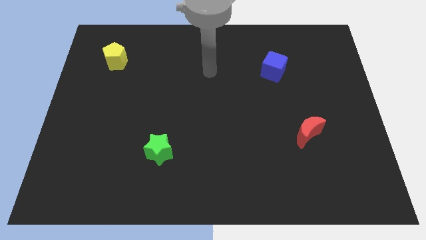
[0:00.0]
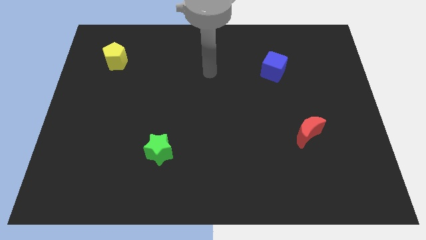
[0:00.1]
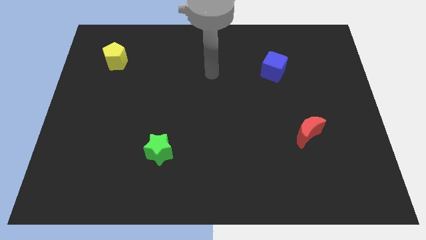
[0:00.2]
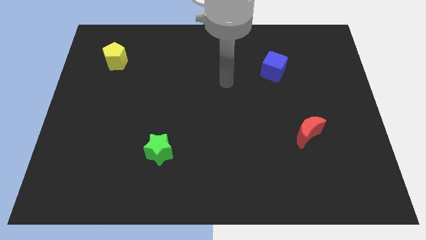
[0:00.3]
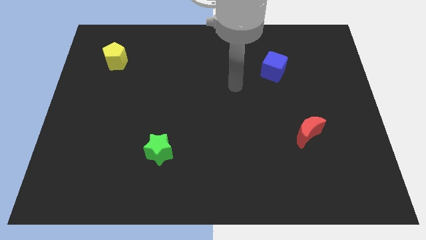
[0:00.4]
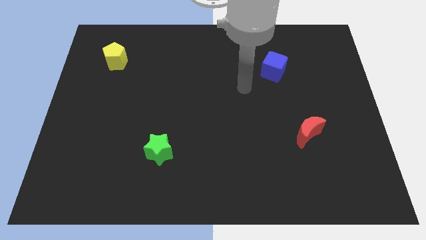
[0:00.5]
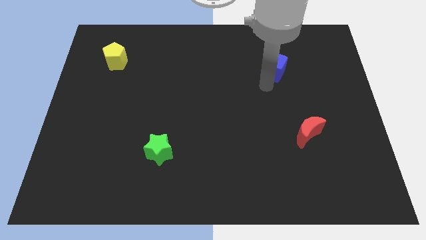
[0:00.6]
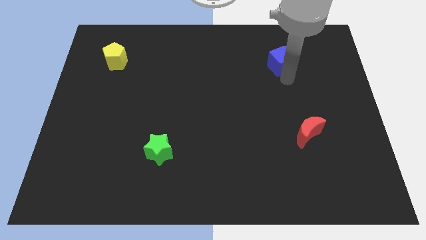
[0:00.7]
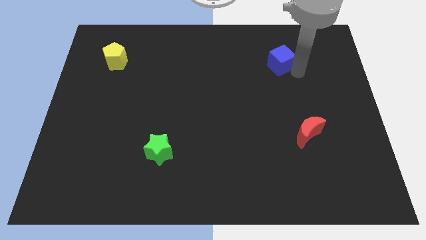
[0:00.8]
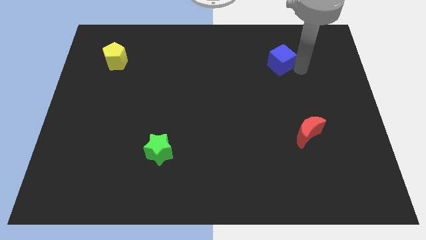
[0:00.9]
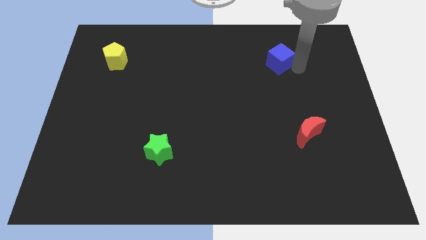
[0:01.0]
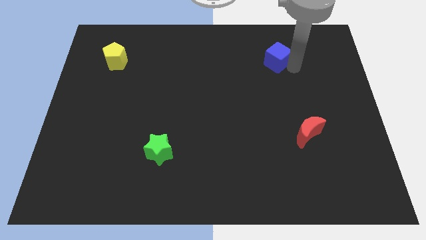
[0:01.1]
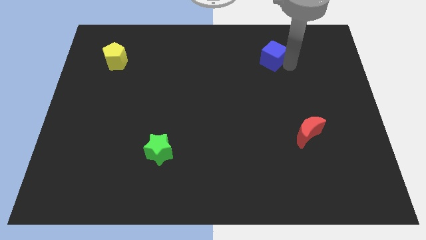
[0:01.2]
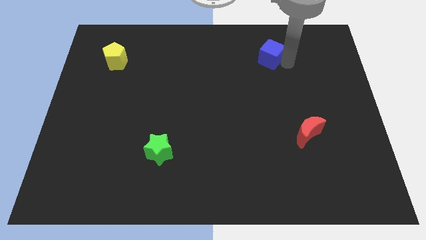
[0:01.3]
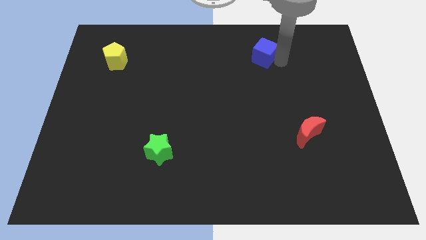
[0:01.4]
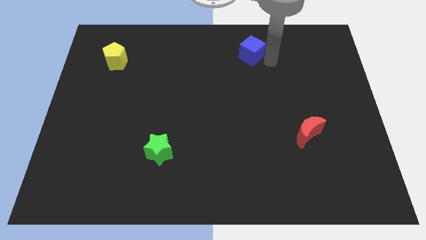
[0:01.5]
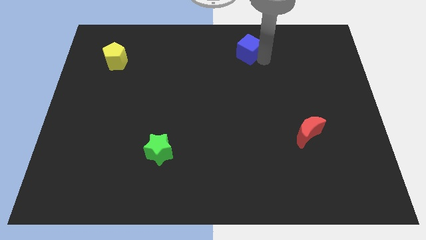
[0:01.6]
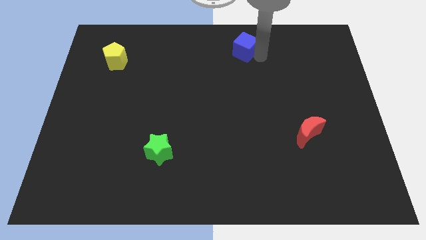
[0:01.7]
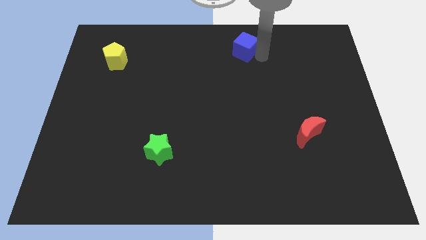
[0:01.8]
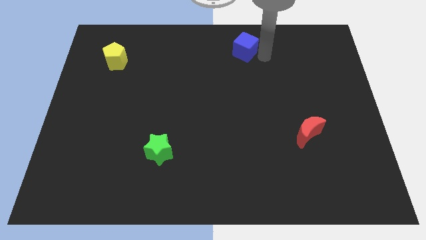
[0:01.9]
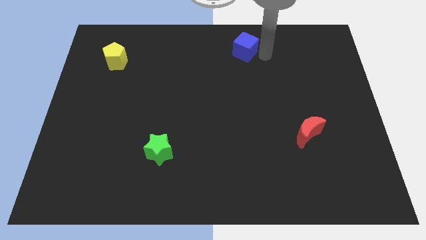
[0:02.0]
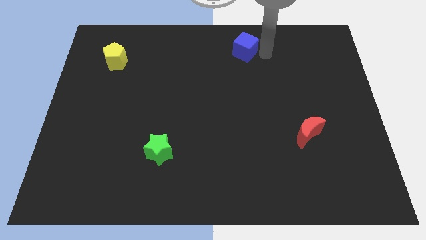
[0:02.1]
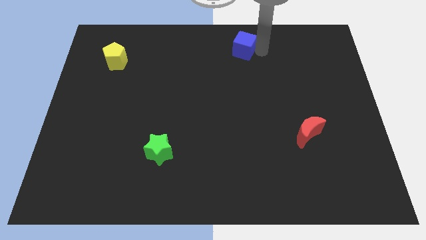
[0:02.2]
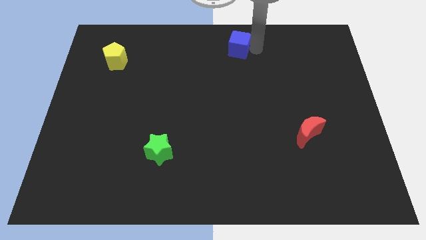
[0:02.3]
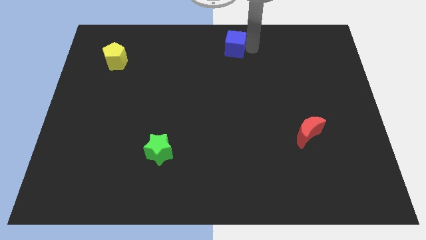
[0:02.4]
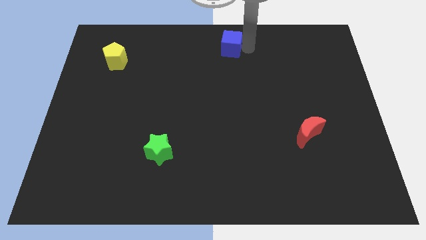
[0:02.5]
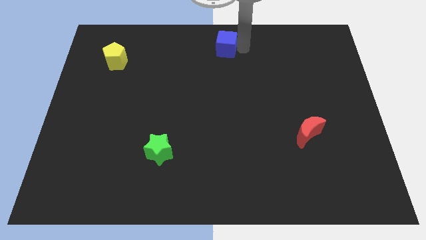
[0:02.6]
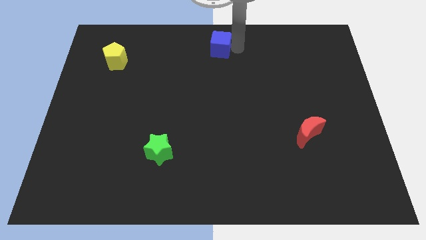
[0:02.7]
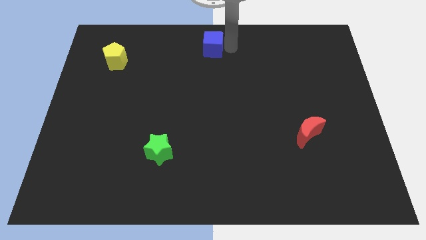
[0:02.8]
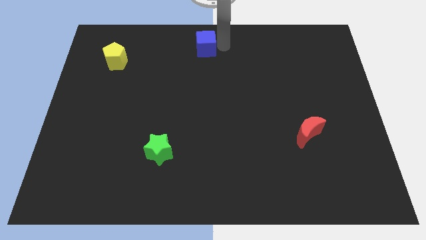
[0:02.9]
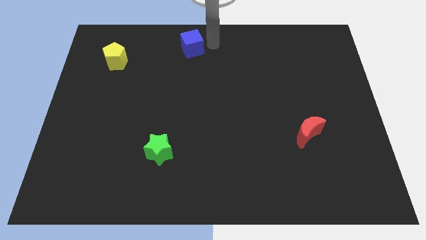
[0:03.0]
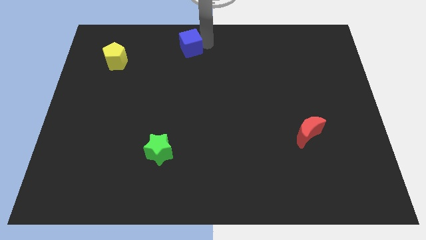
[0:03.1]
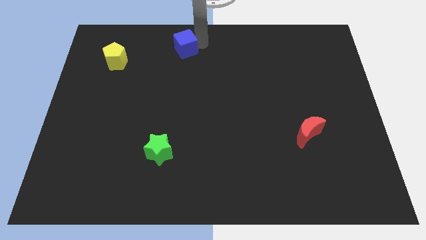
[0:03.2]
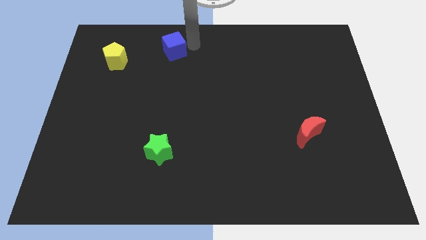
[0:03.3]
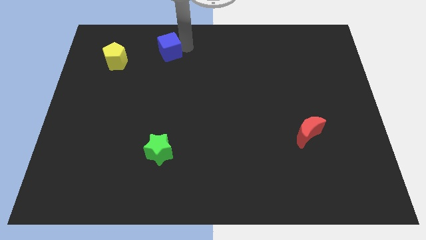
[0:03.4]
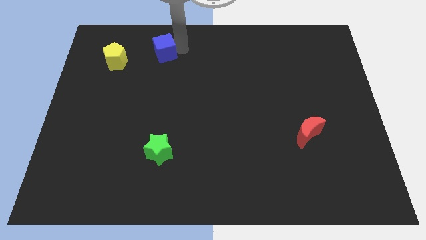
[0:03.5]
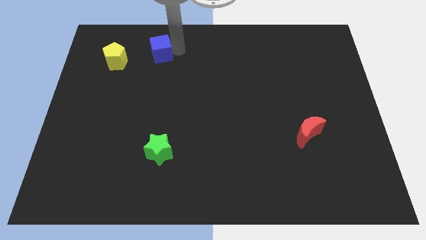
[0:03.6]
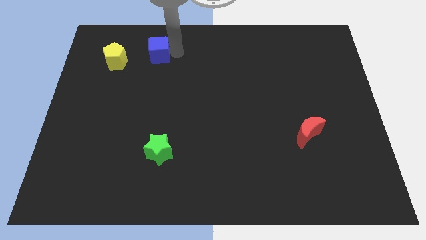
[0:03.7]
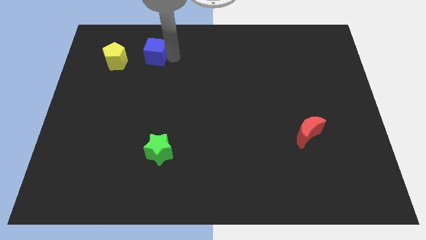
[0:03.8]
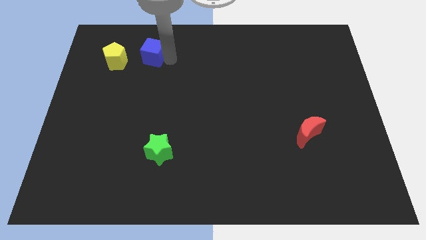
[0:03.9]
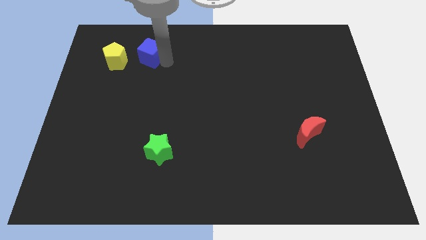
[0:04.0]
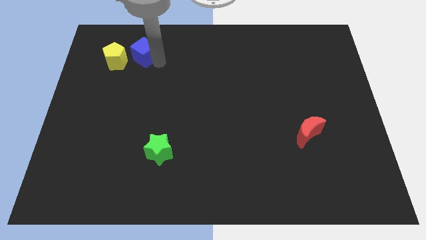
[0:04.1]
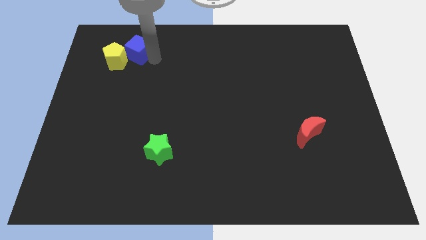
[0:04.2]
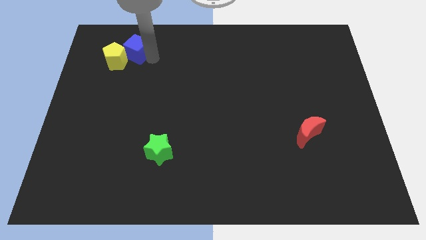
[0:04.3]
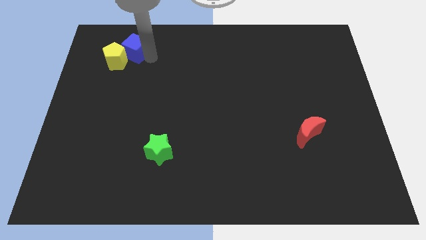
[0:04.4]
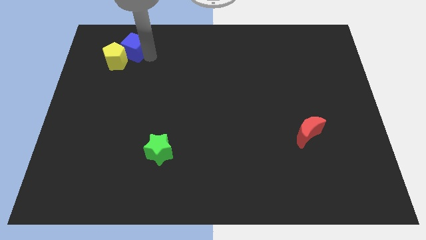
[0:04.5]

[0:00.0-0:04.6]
put the blue block towards the yellow pentagon

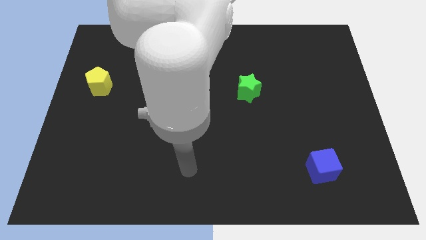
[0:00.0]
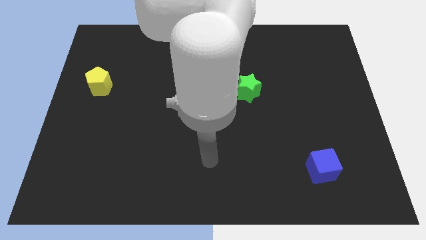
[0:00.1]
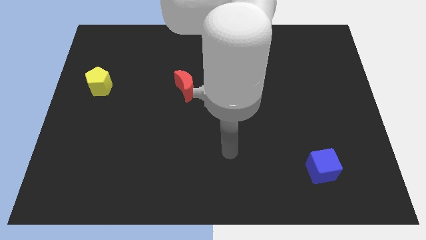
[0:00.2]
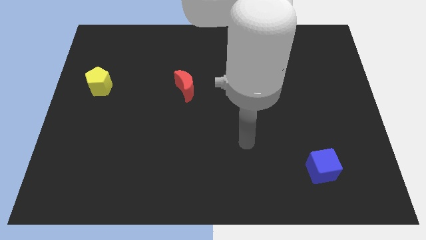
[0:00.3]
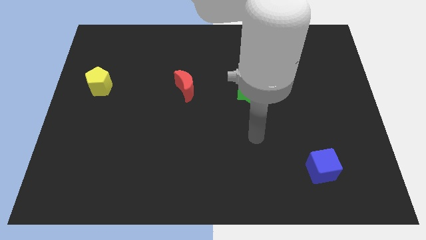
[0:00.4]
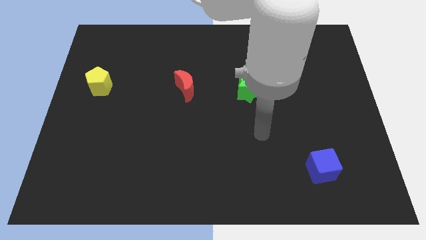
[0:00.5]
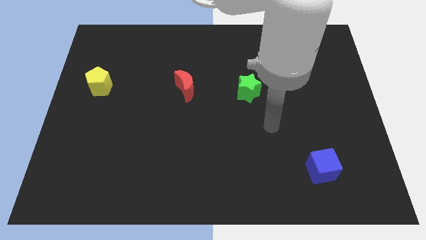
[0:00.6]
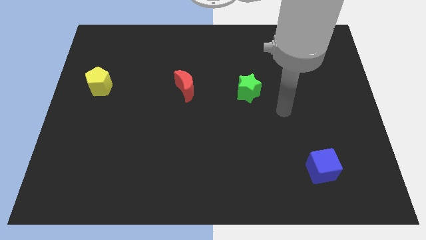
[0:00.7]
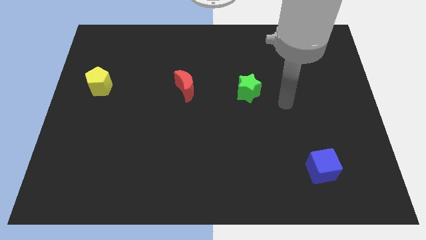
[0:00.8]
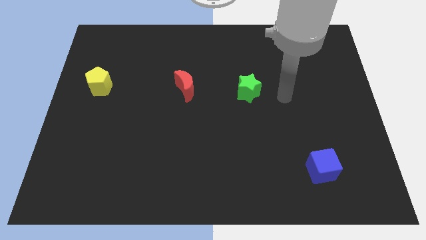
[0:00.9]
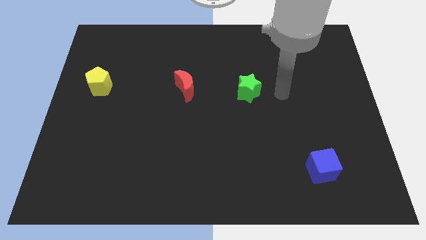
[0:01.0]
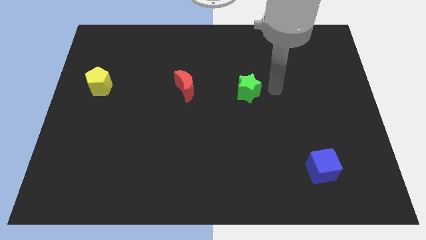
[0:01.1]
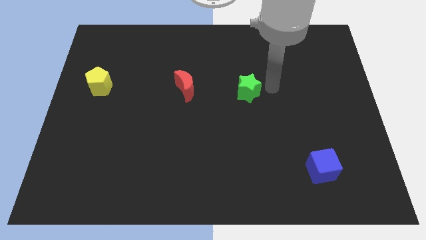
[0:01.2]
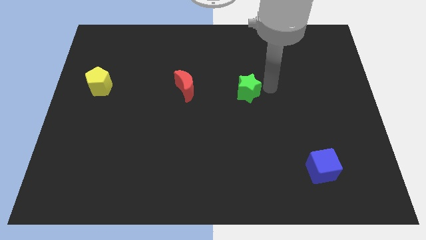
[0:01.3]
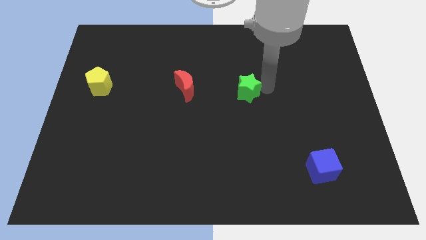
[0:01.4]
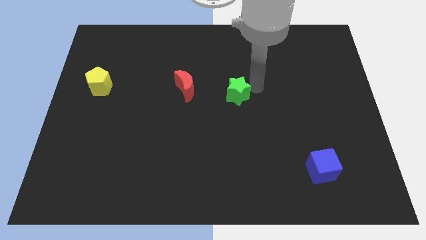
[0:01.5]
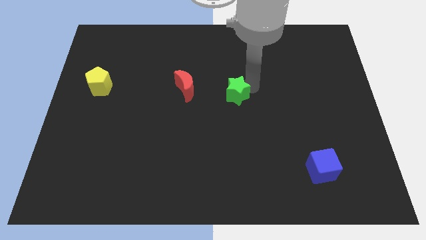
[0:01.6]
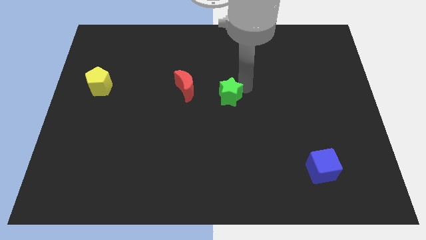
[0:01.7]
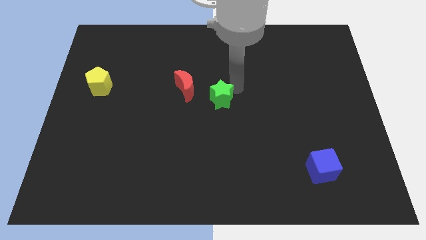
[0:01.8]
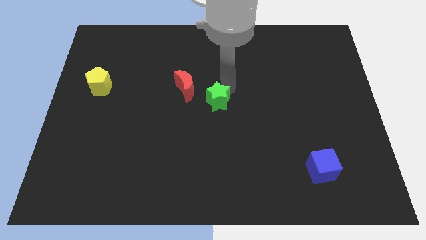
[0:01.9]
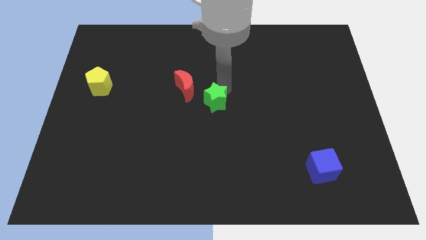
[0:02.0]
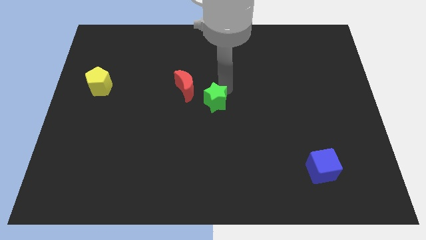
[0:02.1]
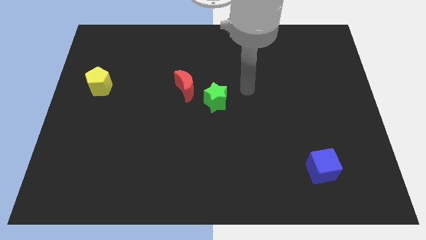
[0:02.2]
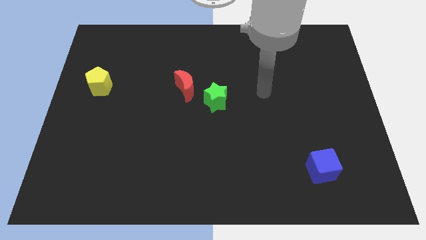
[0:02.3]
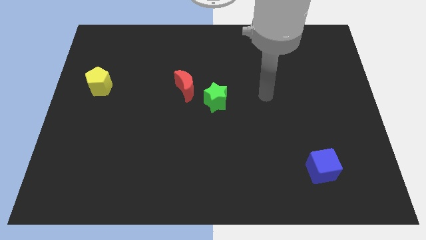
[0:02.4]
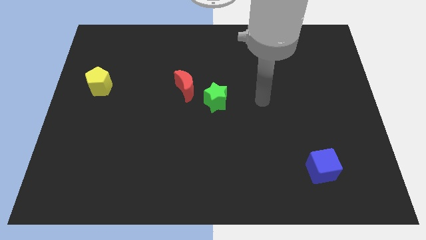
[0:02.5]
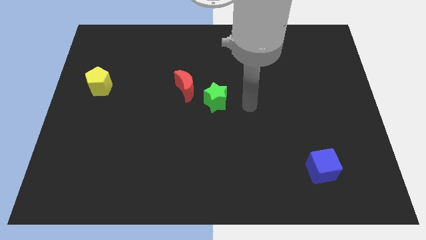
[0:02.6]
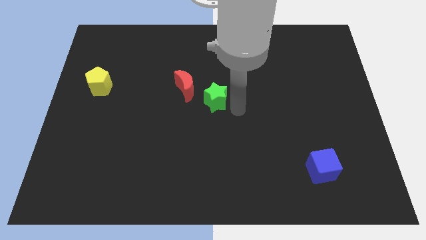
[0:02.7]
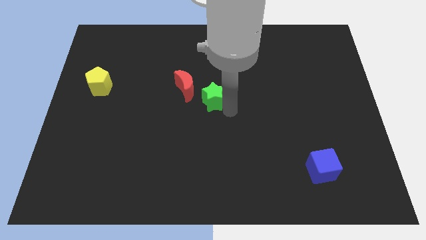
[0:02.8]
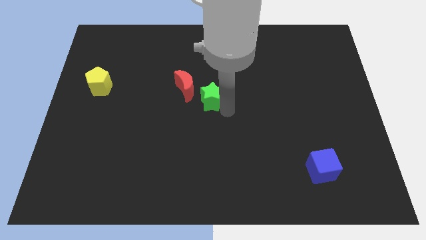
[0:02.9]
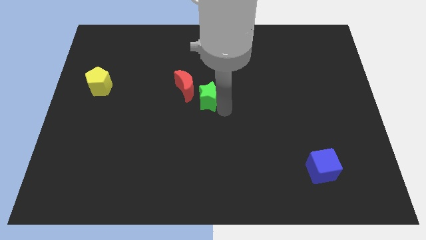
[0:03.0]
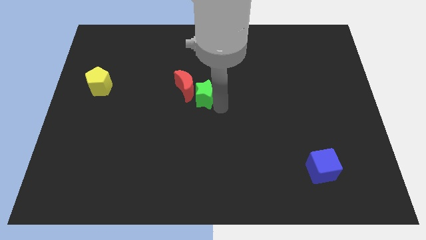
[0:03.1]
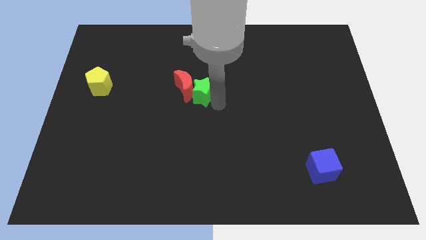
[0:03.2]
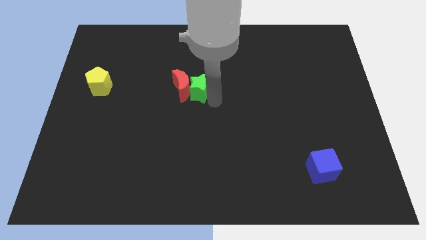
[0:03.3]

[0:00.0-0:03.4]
move the green star close to the red block

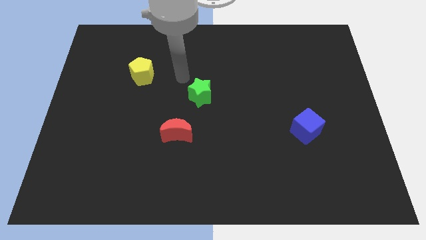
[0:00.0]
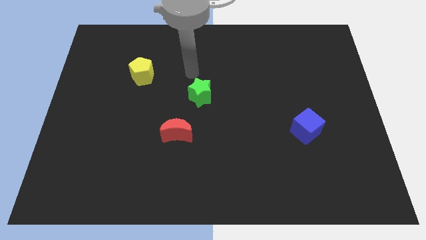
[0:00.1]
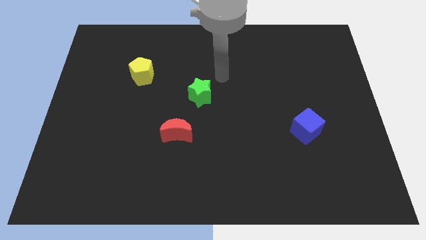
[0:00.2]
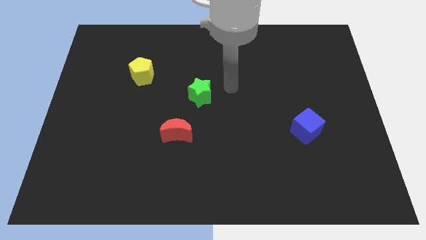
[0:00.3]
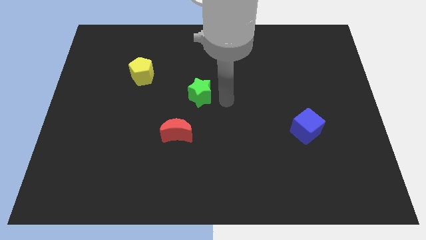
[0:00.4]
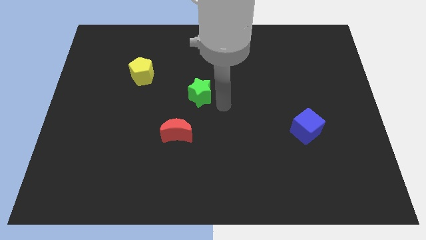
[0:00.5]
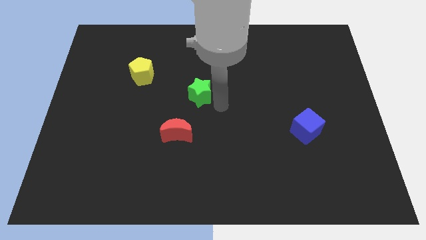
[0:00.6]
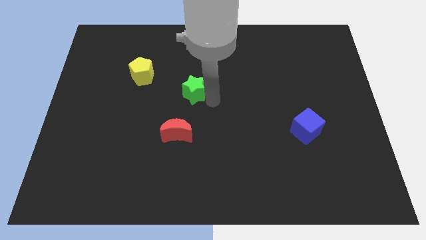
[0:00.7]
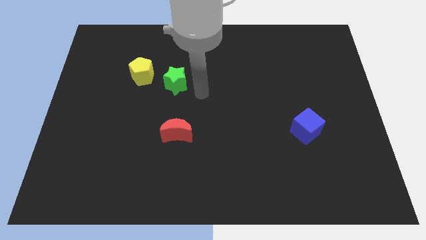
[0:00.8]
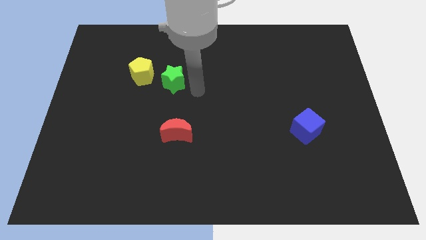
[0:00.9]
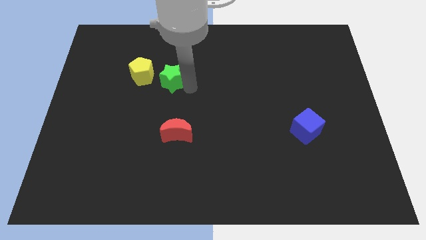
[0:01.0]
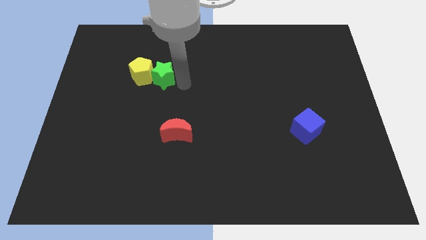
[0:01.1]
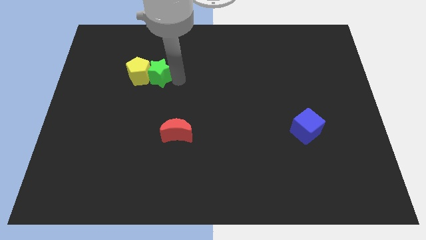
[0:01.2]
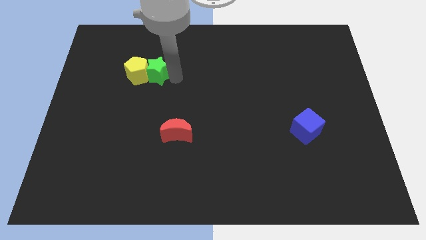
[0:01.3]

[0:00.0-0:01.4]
slide the green block to the yellow block
